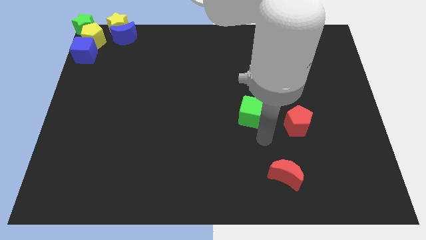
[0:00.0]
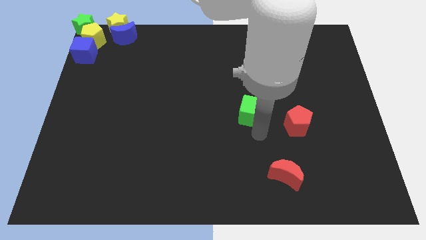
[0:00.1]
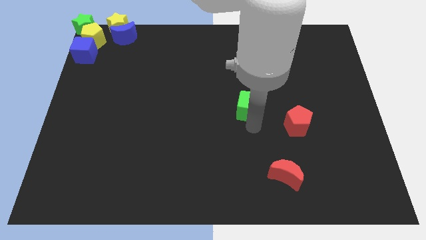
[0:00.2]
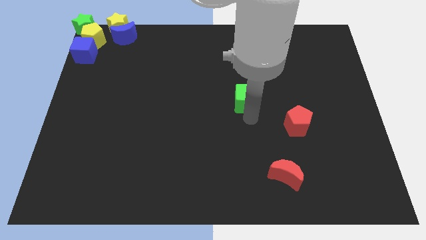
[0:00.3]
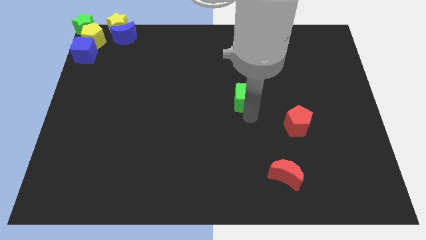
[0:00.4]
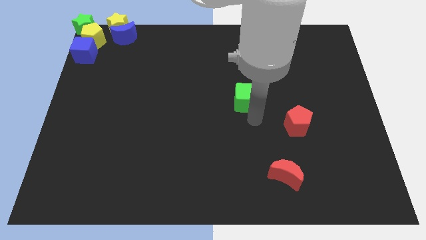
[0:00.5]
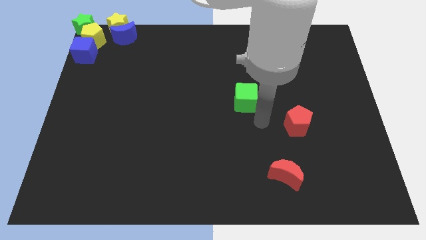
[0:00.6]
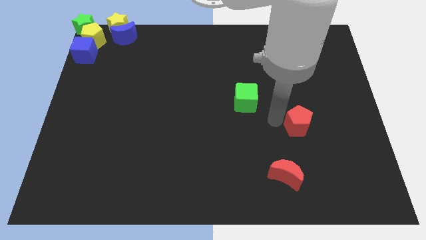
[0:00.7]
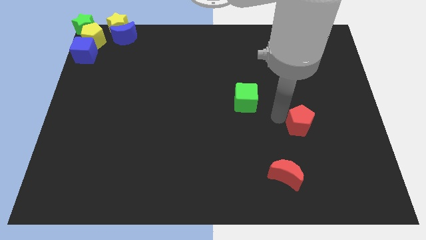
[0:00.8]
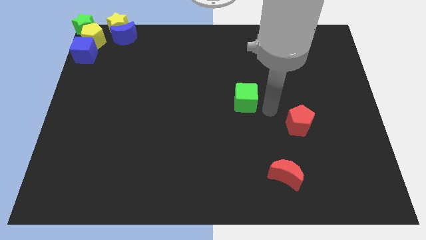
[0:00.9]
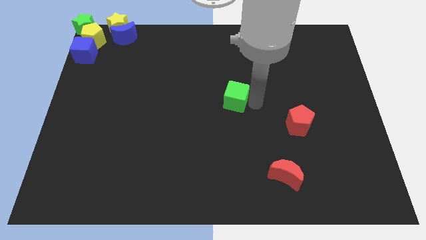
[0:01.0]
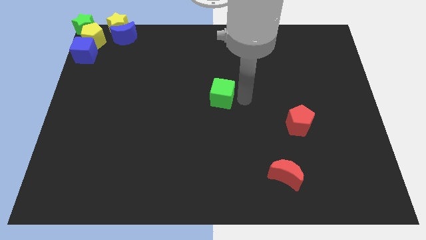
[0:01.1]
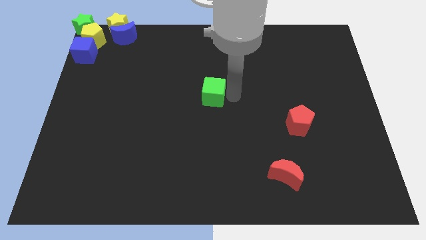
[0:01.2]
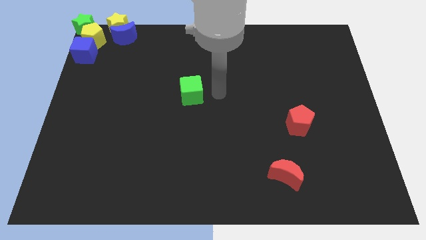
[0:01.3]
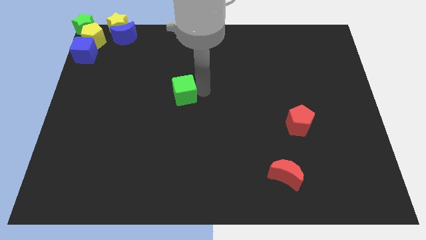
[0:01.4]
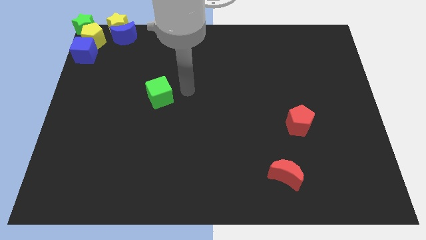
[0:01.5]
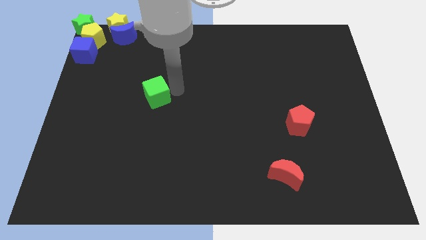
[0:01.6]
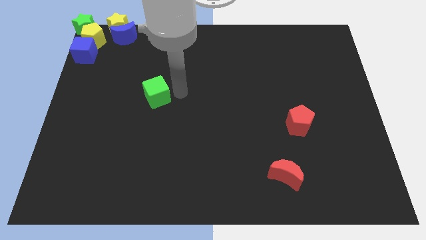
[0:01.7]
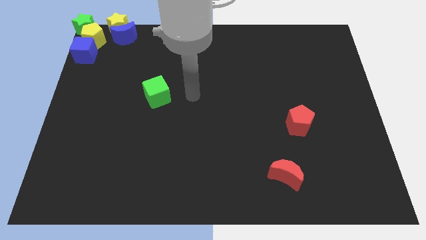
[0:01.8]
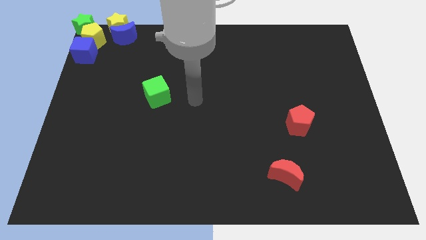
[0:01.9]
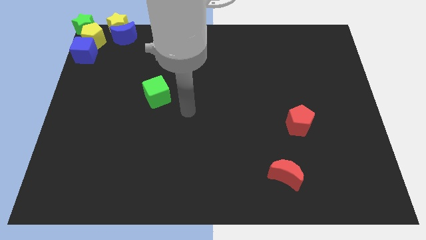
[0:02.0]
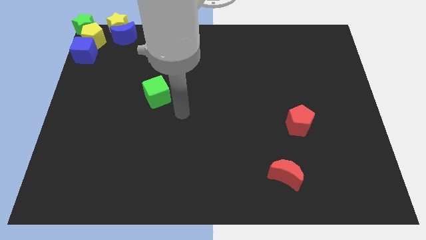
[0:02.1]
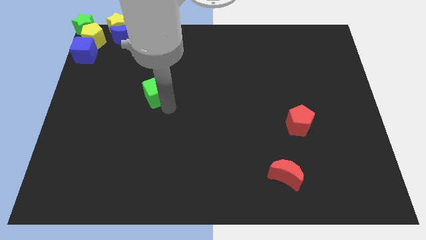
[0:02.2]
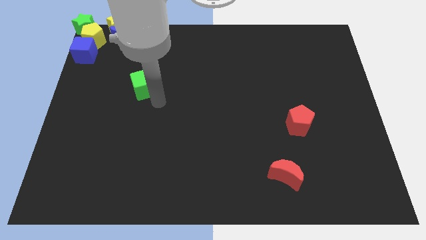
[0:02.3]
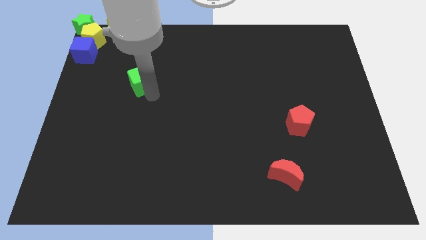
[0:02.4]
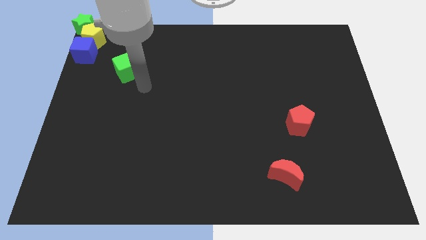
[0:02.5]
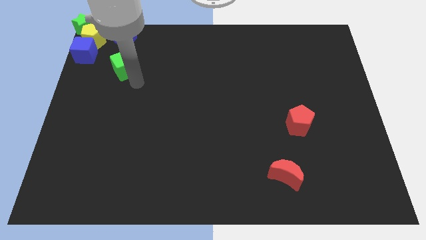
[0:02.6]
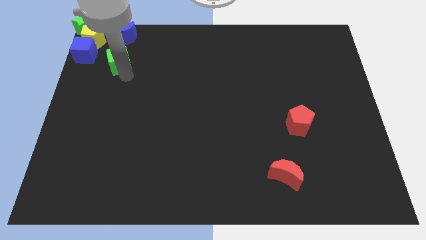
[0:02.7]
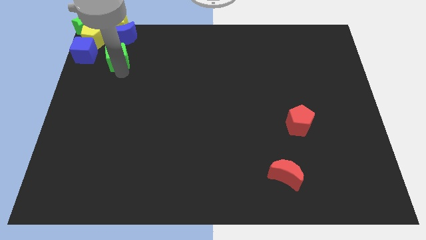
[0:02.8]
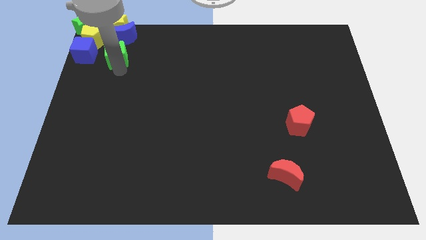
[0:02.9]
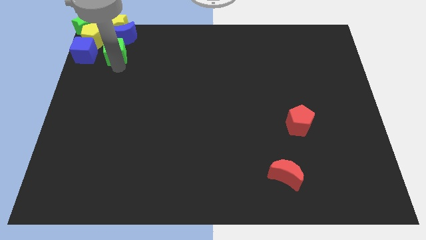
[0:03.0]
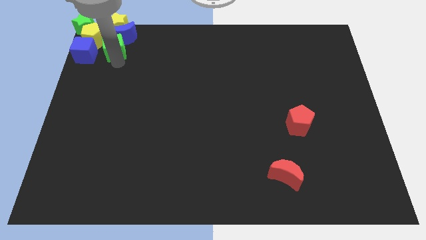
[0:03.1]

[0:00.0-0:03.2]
place green cube to the right of blue cube

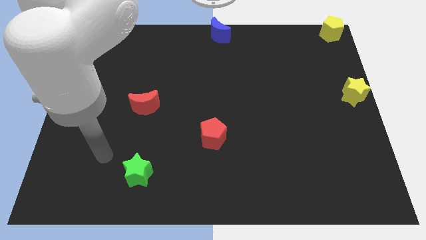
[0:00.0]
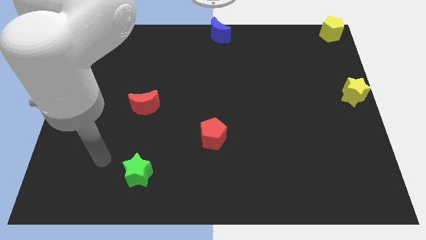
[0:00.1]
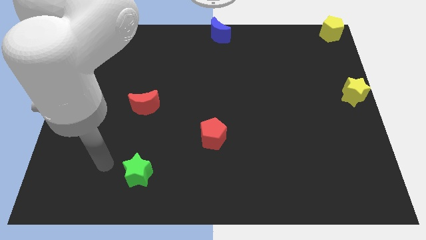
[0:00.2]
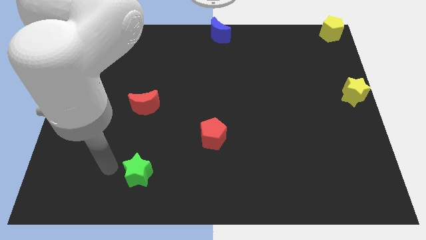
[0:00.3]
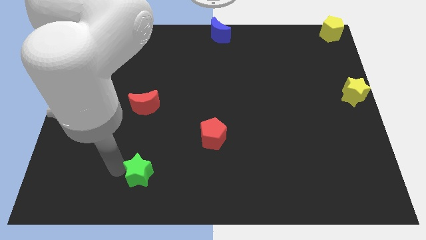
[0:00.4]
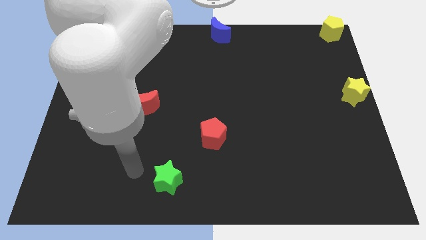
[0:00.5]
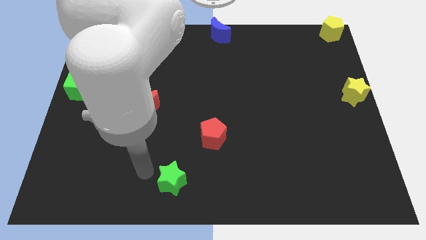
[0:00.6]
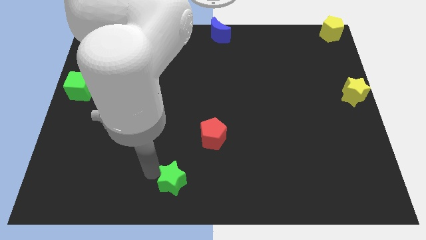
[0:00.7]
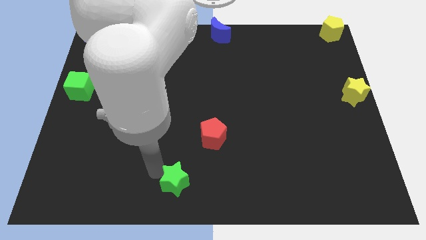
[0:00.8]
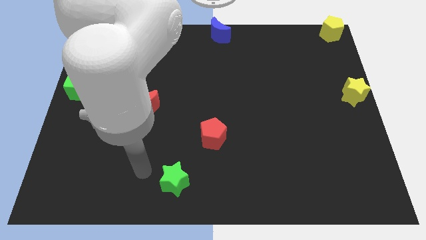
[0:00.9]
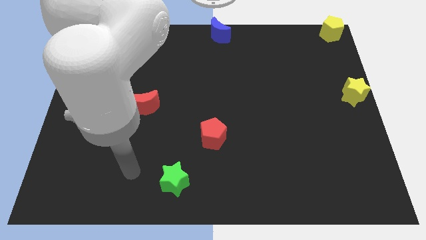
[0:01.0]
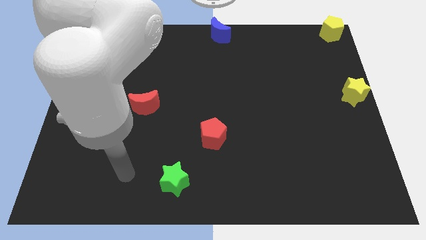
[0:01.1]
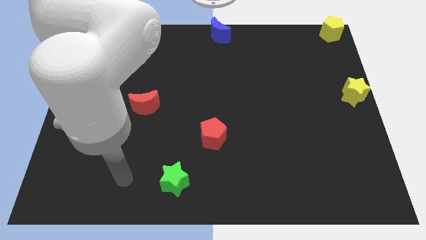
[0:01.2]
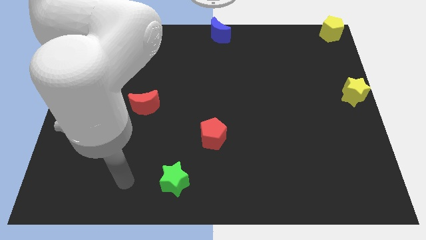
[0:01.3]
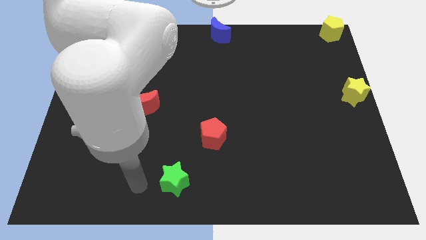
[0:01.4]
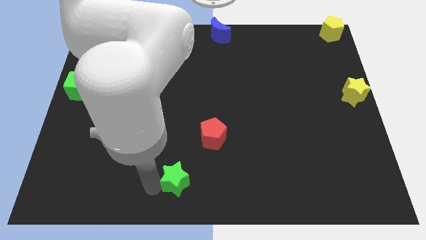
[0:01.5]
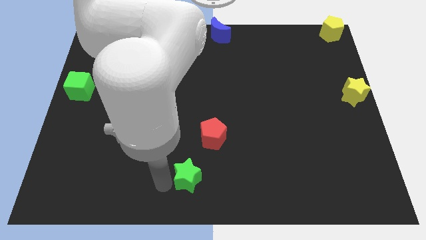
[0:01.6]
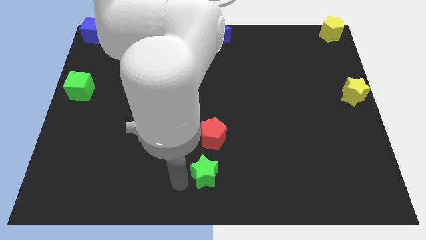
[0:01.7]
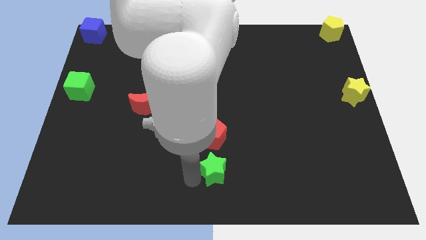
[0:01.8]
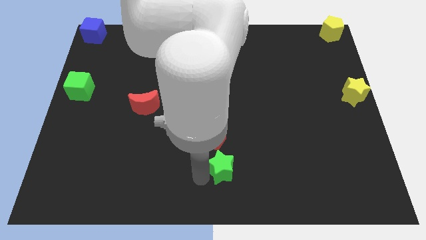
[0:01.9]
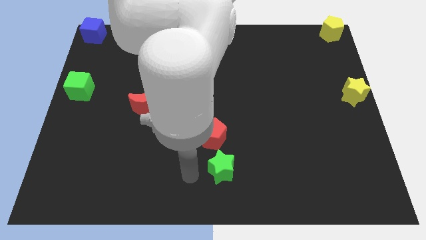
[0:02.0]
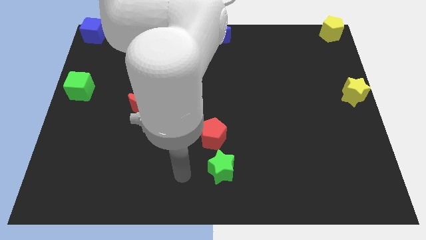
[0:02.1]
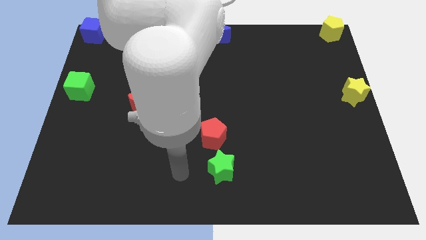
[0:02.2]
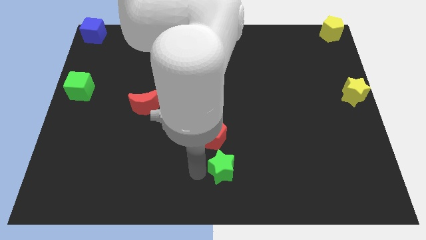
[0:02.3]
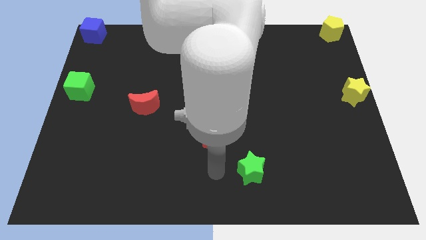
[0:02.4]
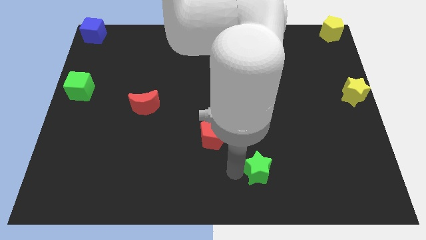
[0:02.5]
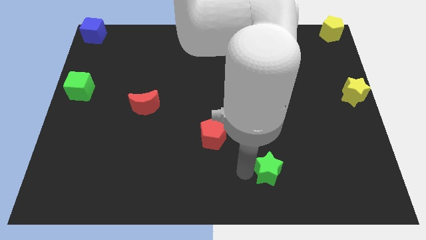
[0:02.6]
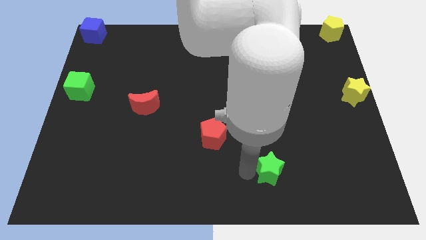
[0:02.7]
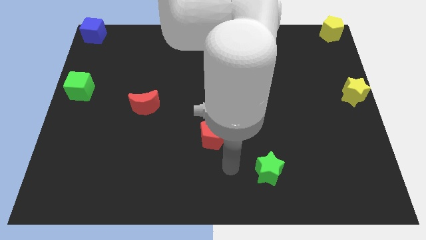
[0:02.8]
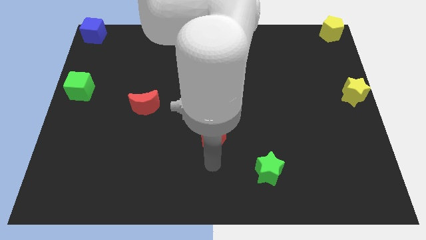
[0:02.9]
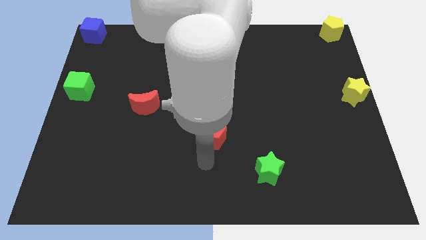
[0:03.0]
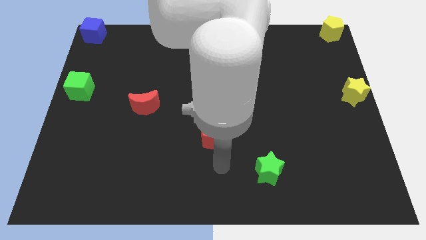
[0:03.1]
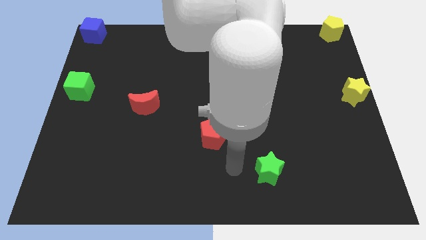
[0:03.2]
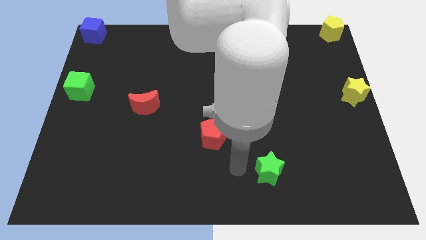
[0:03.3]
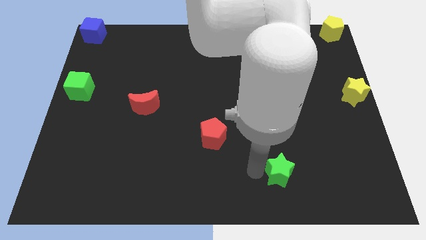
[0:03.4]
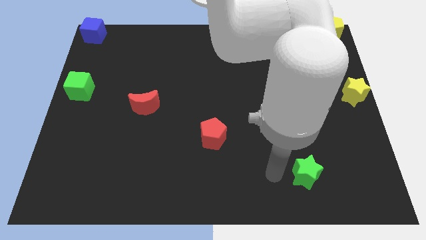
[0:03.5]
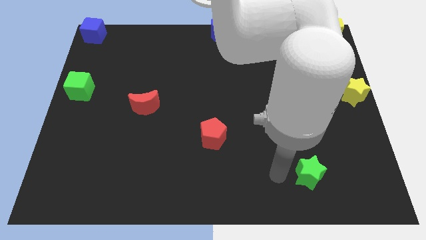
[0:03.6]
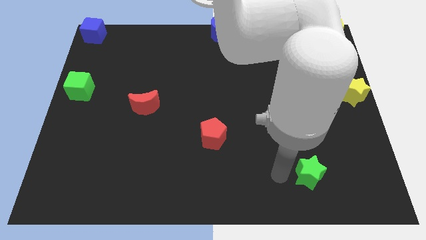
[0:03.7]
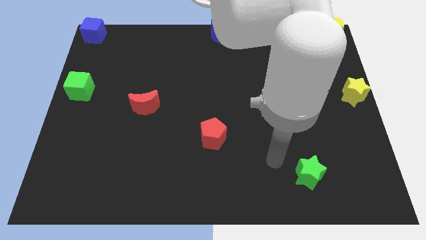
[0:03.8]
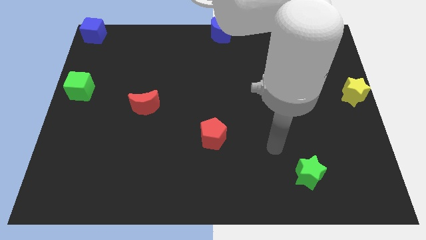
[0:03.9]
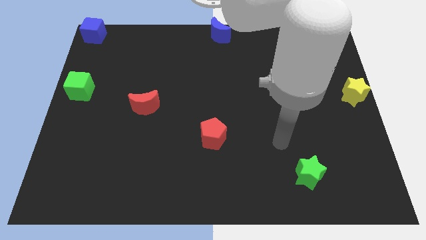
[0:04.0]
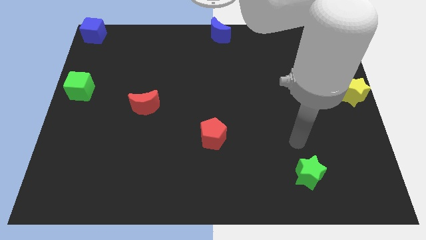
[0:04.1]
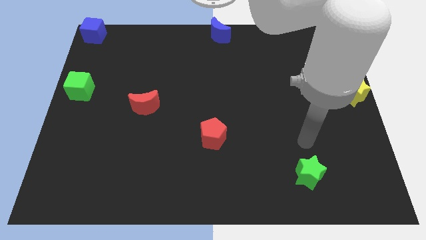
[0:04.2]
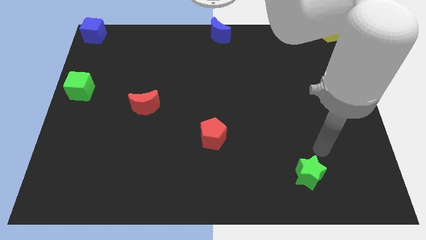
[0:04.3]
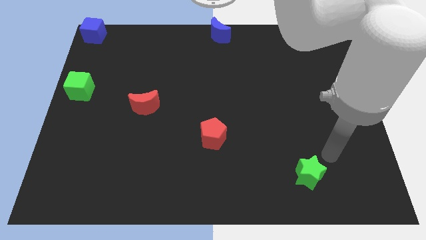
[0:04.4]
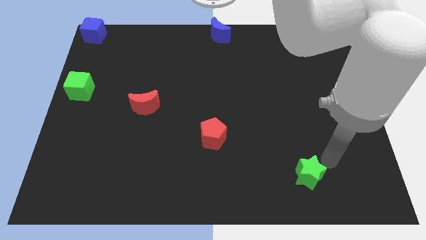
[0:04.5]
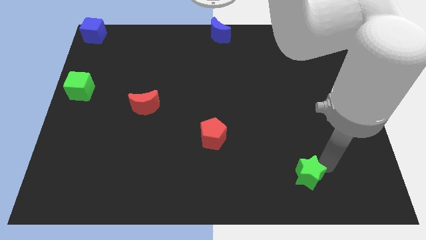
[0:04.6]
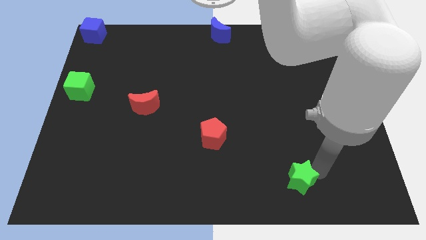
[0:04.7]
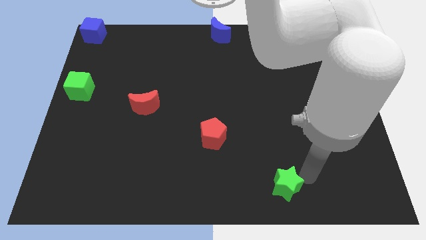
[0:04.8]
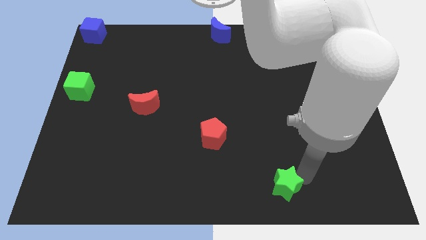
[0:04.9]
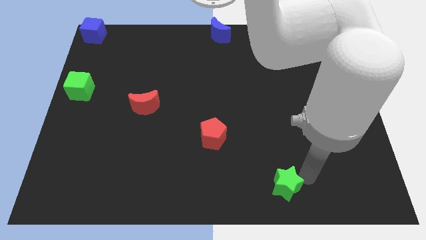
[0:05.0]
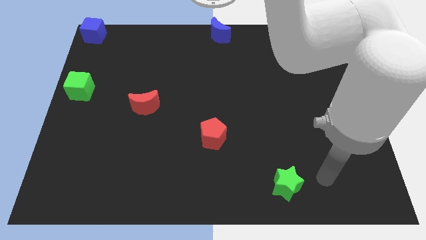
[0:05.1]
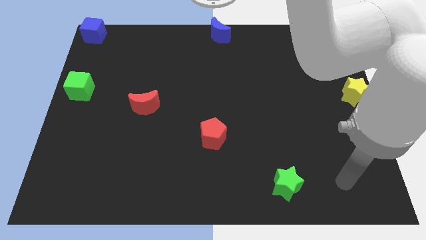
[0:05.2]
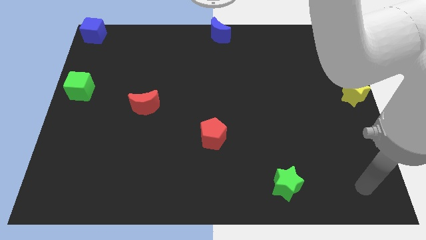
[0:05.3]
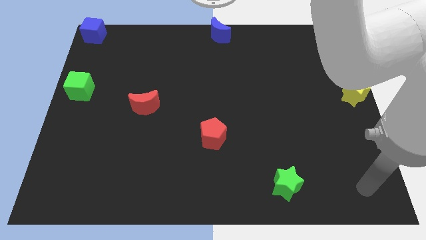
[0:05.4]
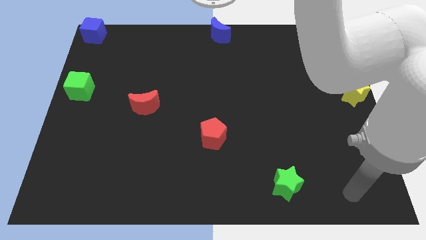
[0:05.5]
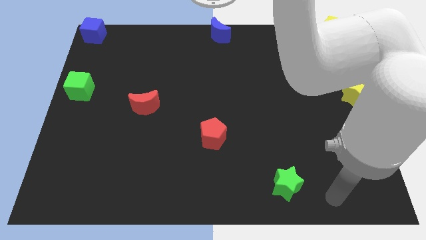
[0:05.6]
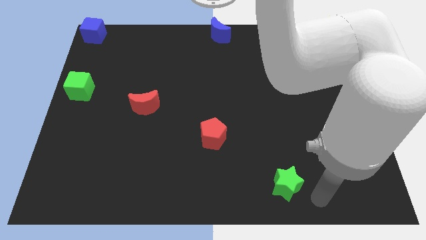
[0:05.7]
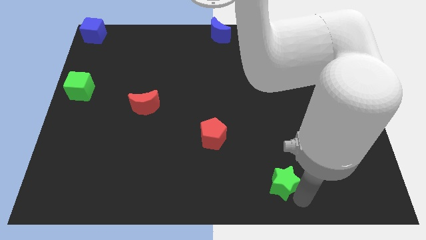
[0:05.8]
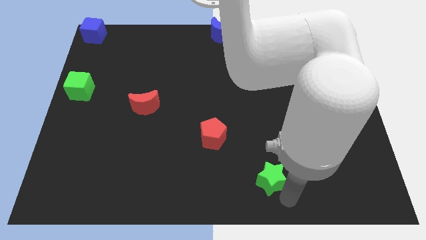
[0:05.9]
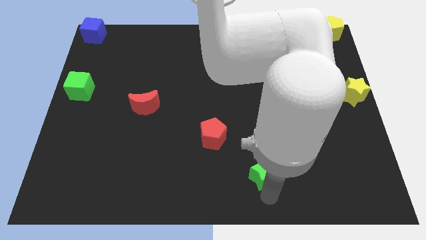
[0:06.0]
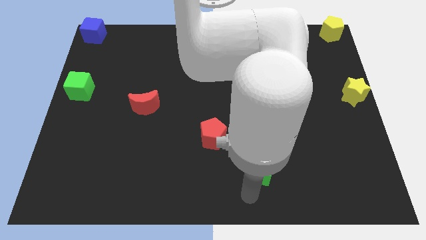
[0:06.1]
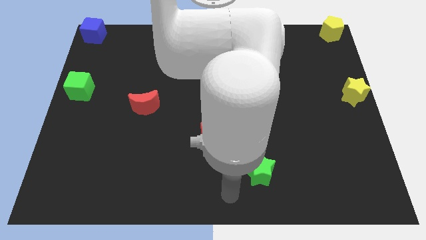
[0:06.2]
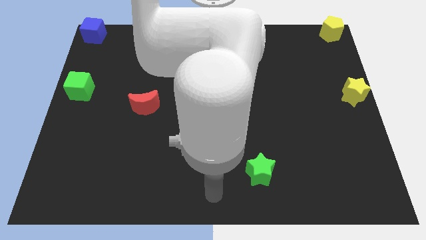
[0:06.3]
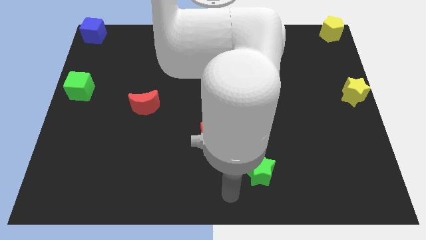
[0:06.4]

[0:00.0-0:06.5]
push the green star to the bottom right of the red pentagon
